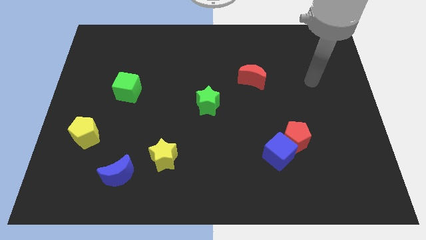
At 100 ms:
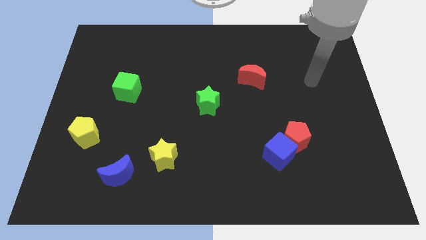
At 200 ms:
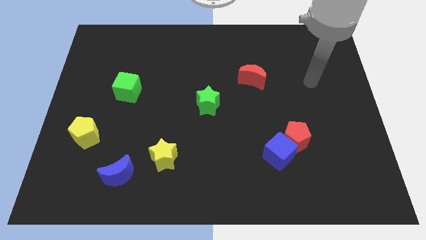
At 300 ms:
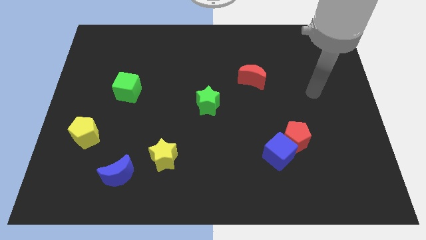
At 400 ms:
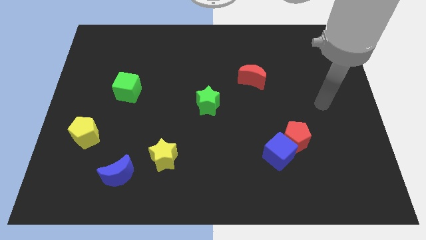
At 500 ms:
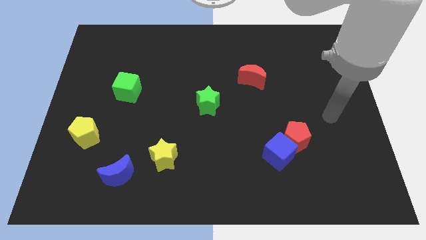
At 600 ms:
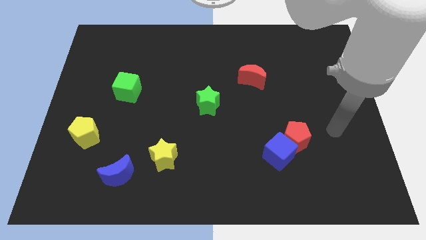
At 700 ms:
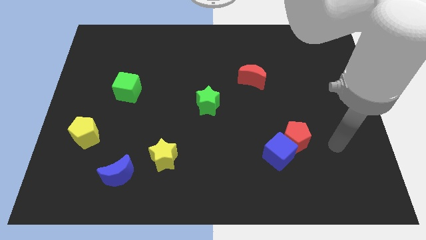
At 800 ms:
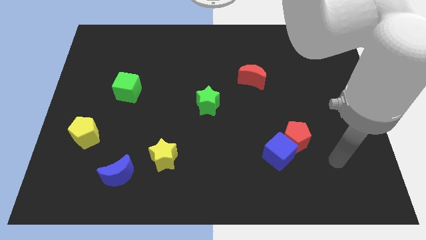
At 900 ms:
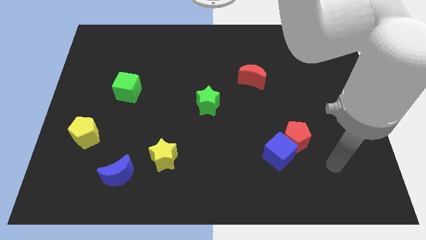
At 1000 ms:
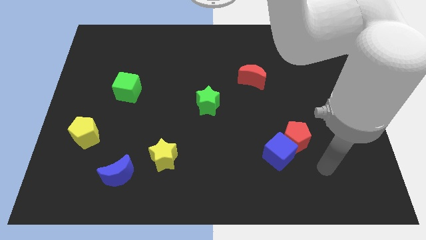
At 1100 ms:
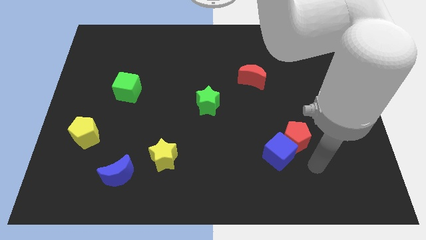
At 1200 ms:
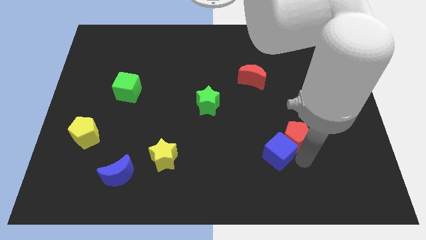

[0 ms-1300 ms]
move your arm towards the blue cube

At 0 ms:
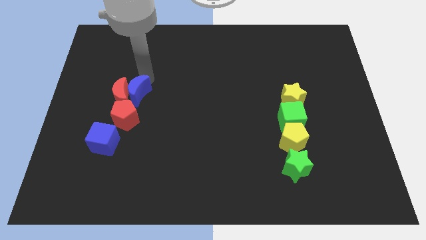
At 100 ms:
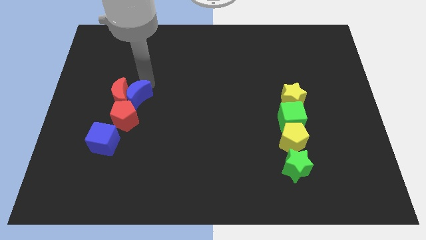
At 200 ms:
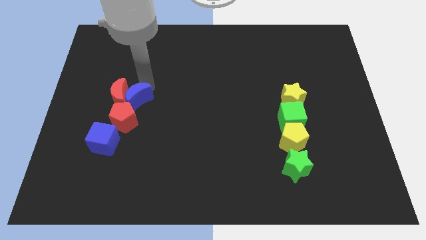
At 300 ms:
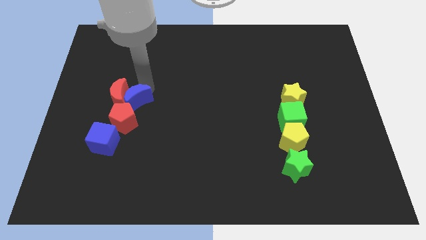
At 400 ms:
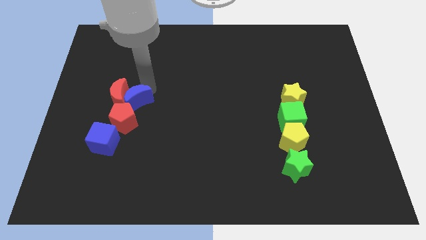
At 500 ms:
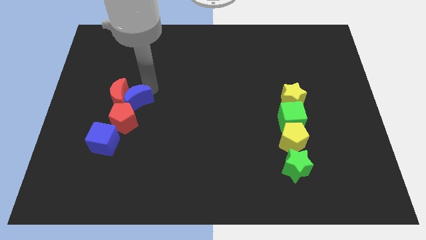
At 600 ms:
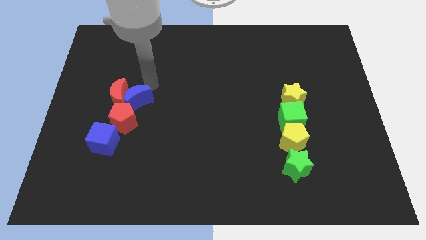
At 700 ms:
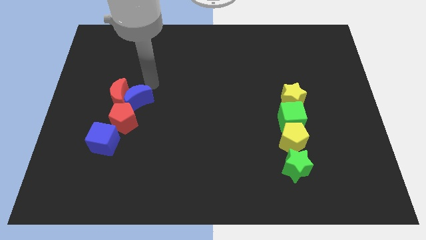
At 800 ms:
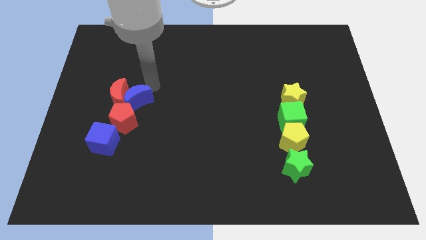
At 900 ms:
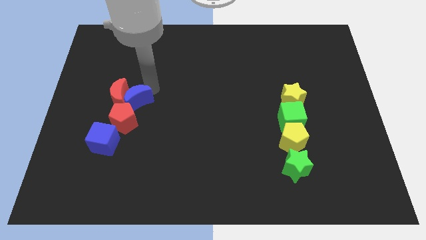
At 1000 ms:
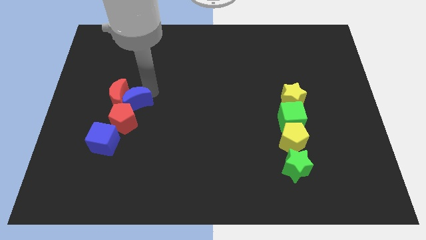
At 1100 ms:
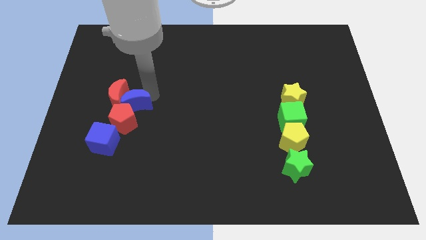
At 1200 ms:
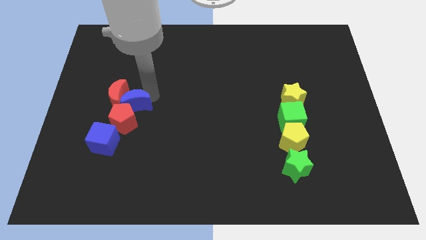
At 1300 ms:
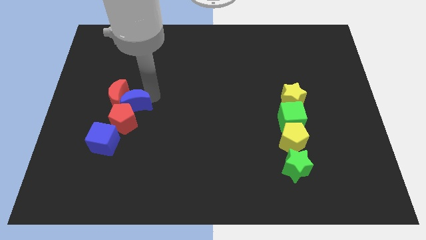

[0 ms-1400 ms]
move the blue moon slightly down

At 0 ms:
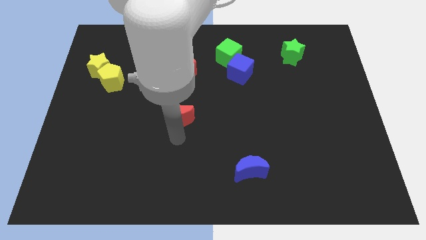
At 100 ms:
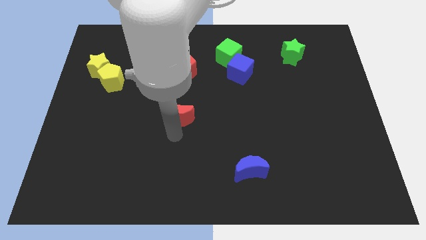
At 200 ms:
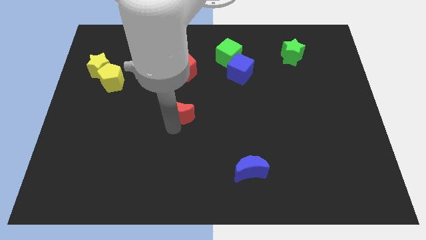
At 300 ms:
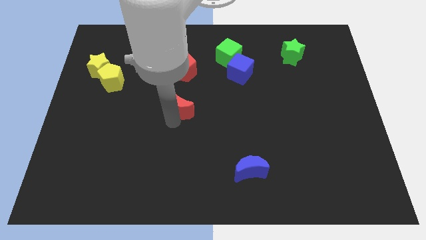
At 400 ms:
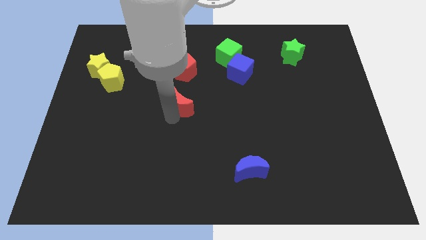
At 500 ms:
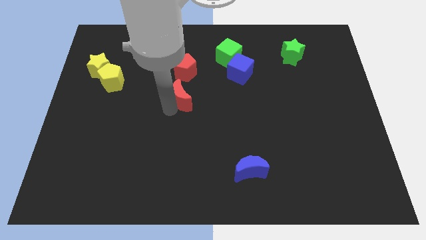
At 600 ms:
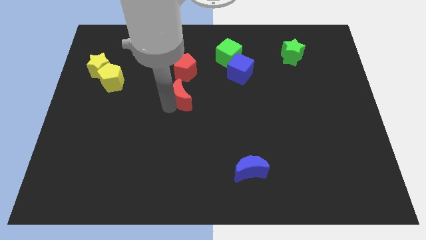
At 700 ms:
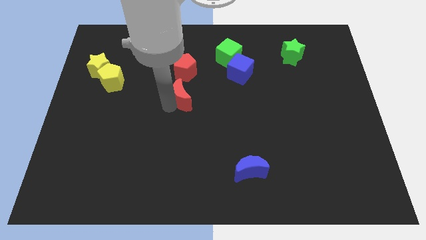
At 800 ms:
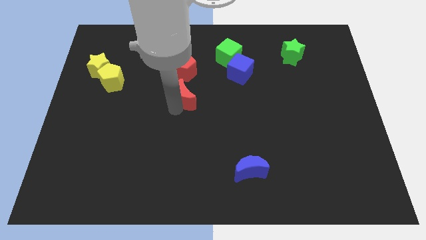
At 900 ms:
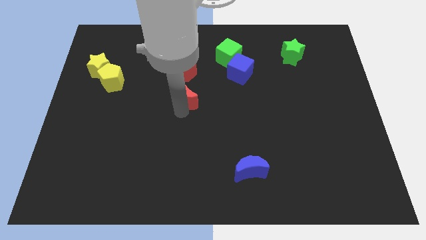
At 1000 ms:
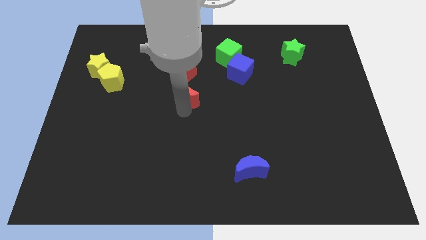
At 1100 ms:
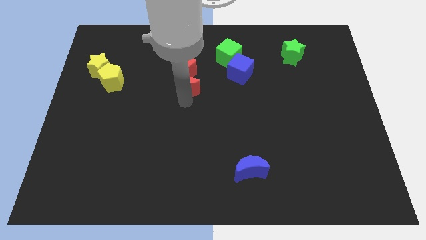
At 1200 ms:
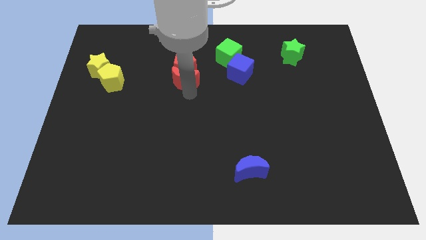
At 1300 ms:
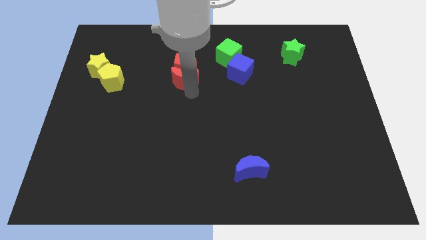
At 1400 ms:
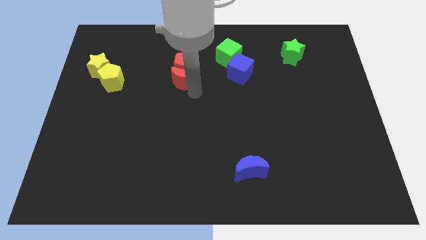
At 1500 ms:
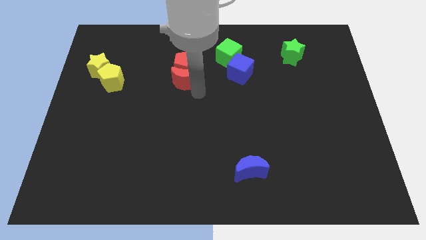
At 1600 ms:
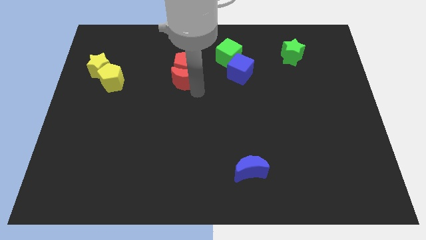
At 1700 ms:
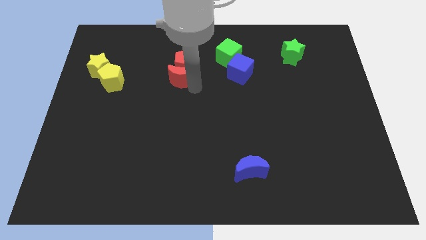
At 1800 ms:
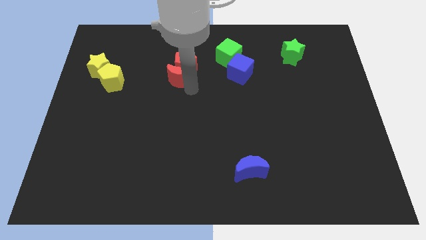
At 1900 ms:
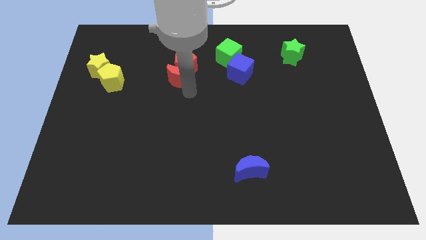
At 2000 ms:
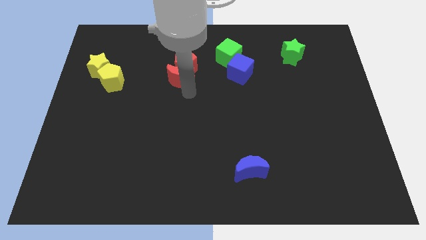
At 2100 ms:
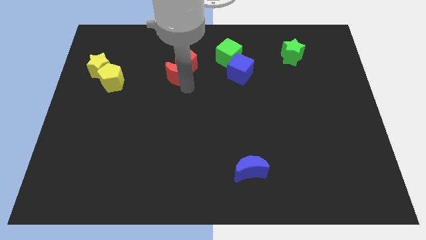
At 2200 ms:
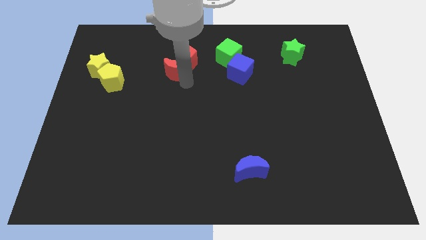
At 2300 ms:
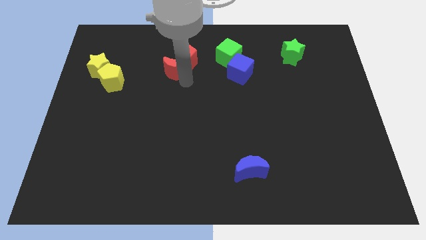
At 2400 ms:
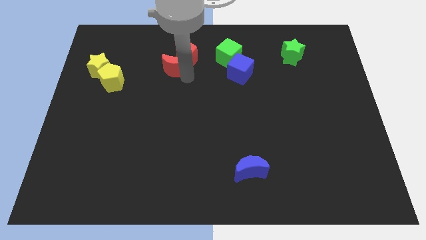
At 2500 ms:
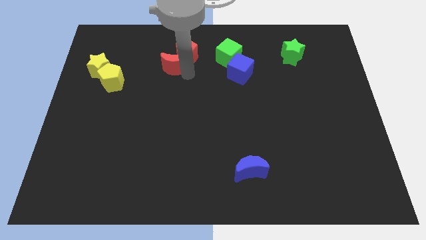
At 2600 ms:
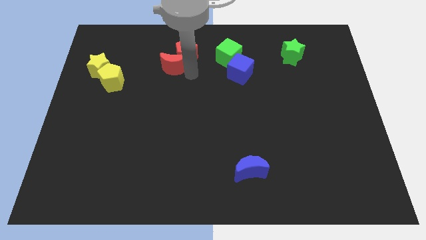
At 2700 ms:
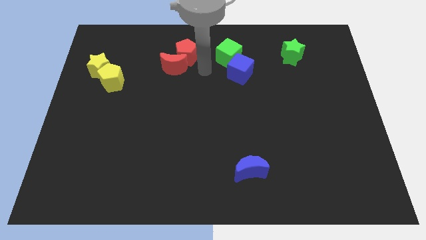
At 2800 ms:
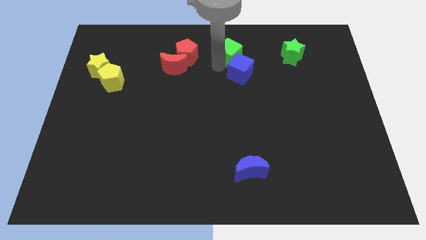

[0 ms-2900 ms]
move the red crescent to the bottom of the red pentagon

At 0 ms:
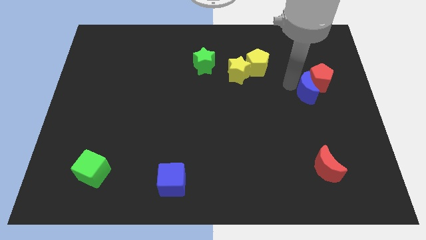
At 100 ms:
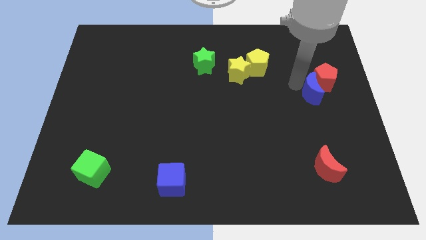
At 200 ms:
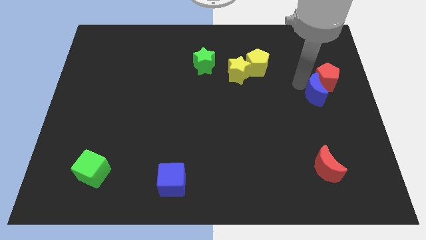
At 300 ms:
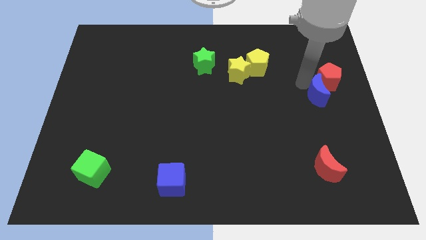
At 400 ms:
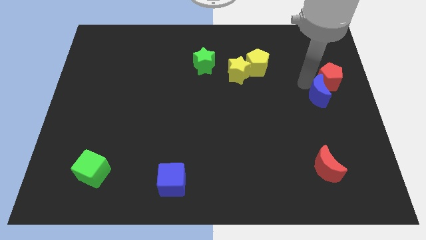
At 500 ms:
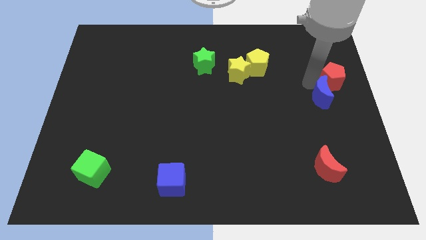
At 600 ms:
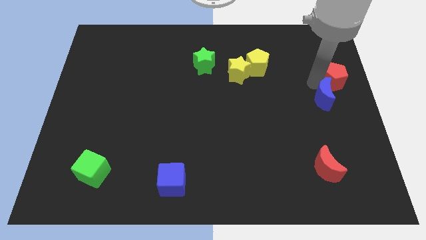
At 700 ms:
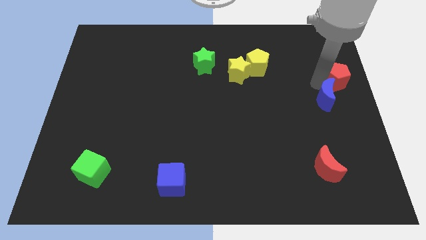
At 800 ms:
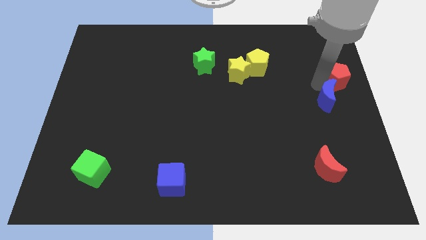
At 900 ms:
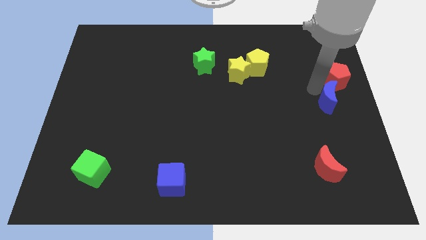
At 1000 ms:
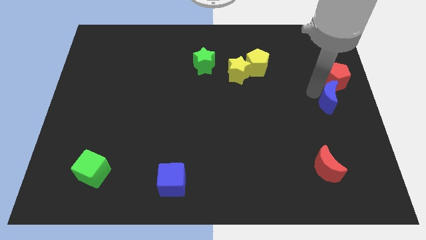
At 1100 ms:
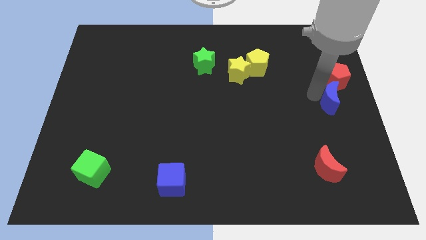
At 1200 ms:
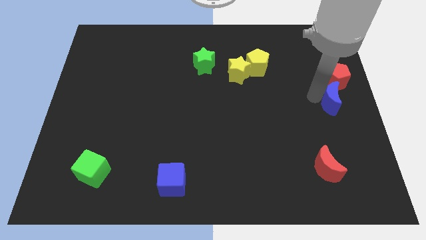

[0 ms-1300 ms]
push blue crescent to the bottom of the red pentagon

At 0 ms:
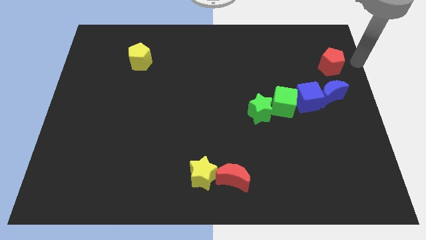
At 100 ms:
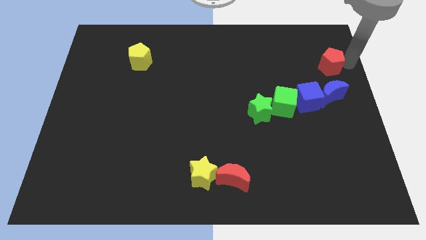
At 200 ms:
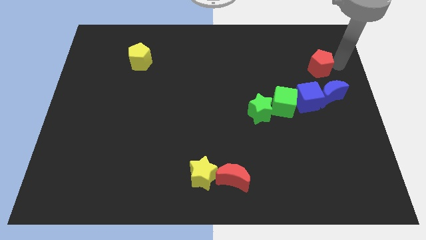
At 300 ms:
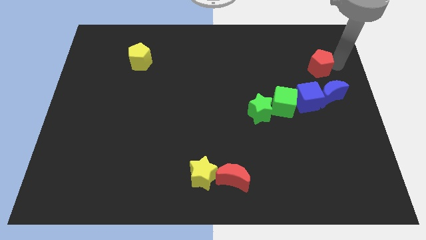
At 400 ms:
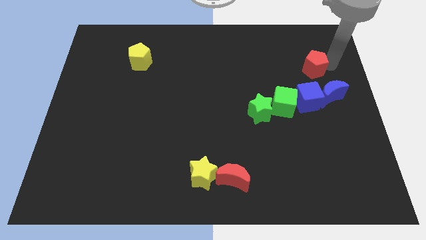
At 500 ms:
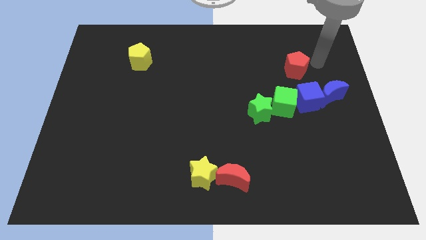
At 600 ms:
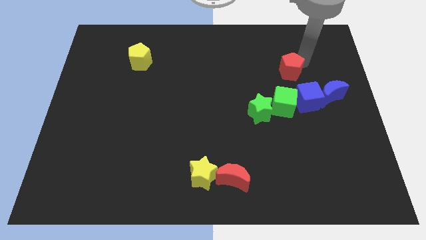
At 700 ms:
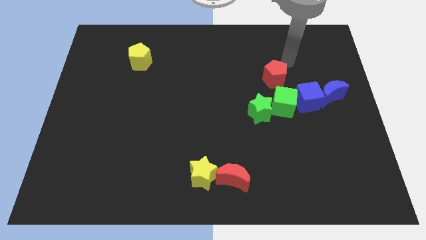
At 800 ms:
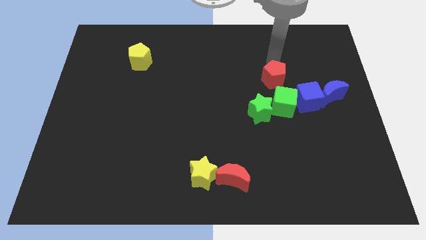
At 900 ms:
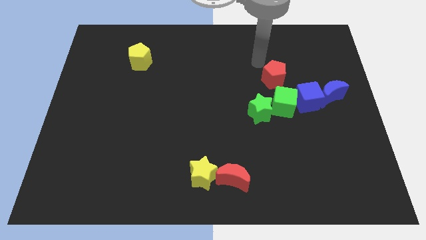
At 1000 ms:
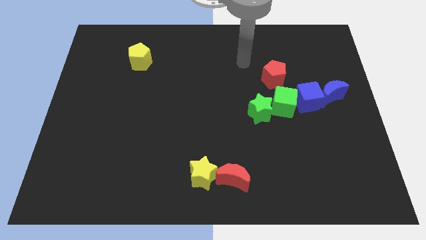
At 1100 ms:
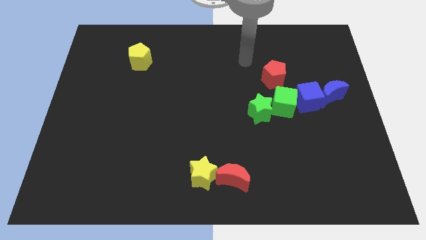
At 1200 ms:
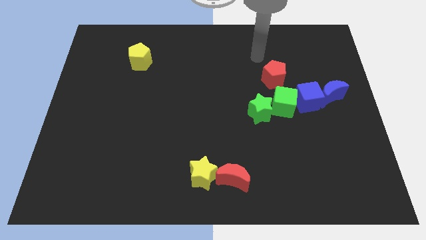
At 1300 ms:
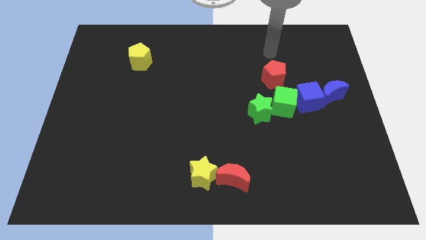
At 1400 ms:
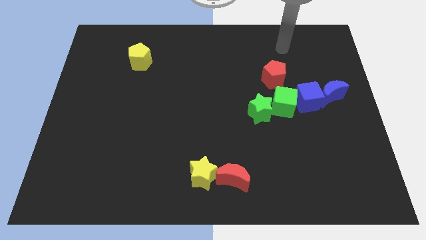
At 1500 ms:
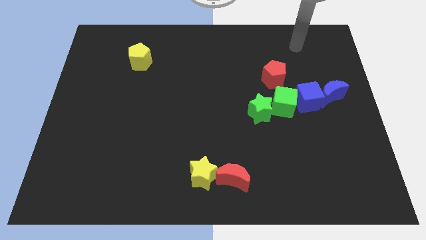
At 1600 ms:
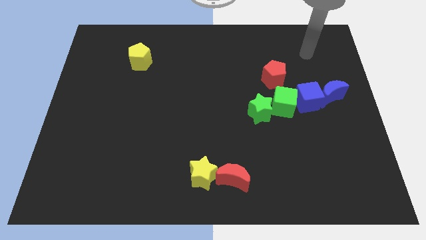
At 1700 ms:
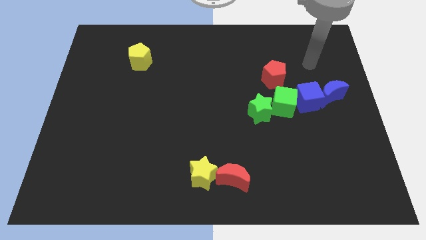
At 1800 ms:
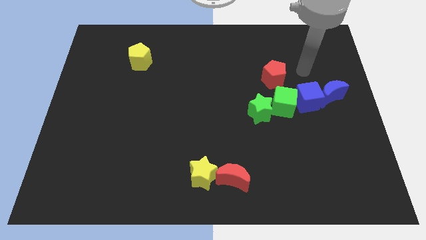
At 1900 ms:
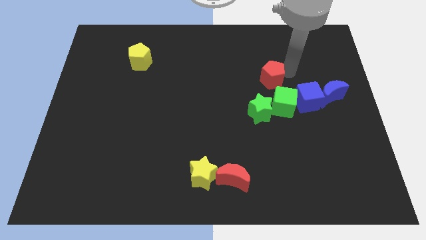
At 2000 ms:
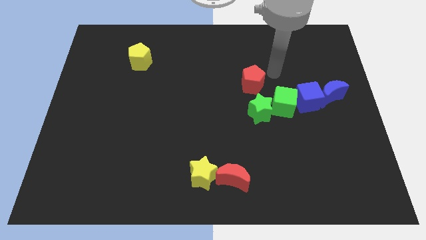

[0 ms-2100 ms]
move the red pentagon above the green star
